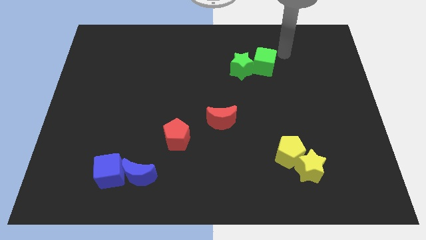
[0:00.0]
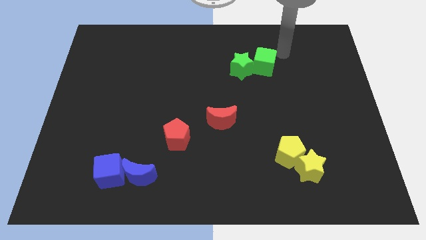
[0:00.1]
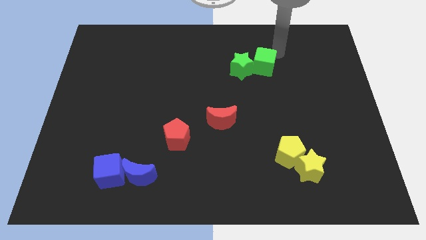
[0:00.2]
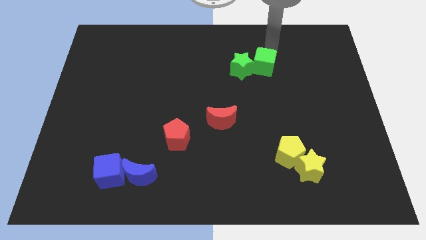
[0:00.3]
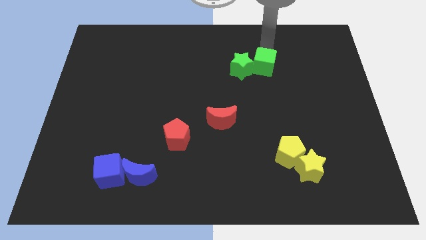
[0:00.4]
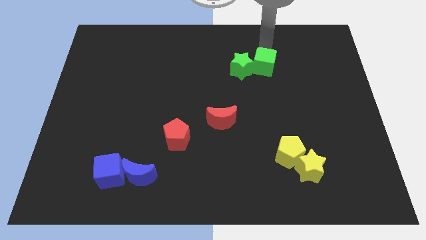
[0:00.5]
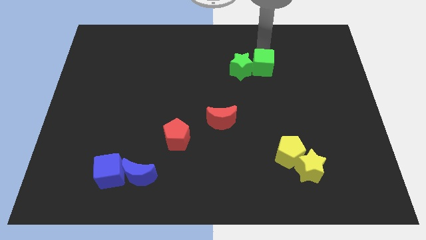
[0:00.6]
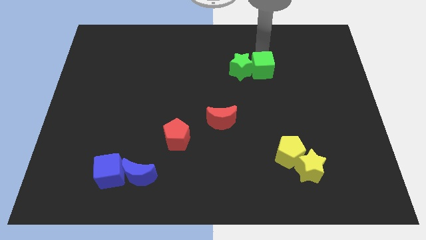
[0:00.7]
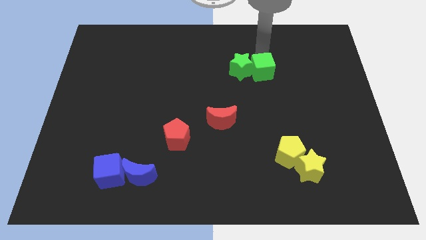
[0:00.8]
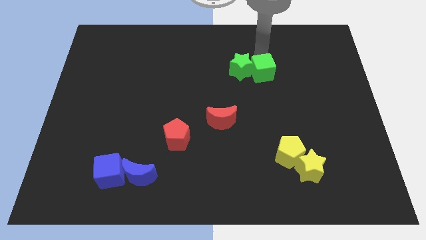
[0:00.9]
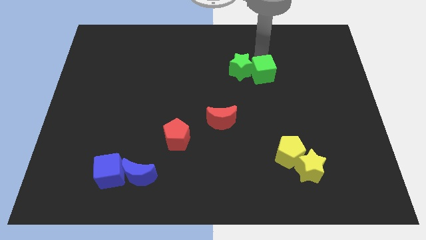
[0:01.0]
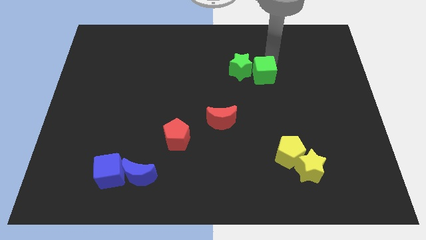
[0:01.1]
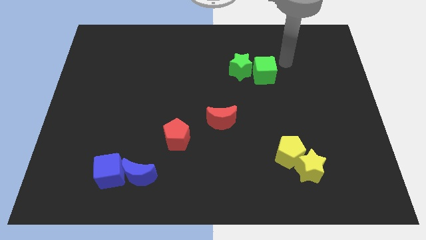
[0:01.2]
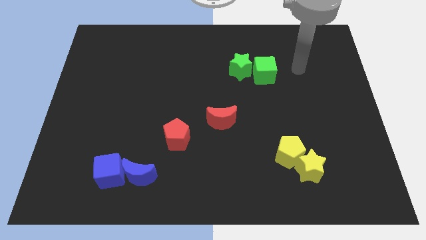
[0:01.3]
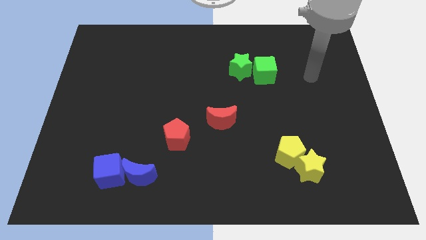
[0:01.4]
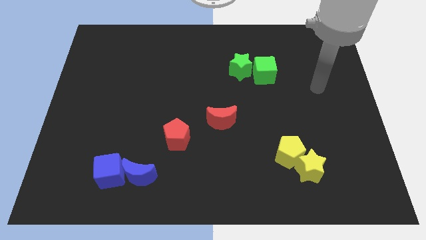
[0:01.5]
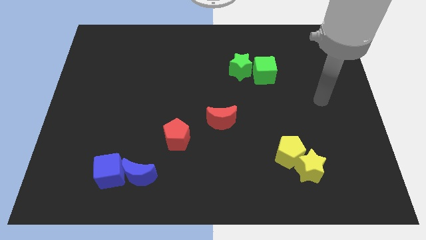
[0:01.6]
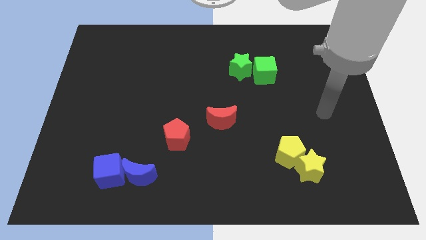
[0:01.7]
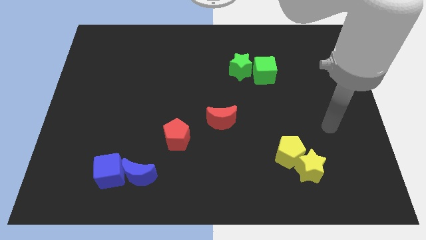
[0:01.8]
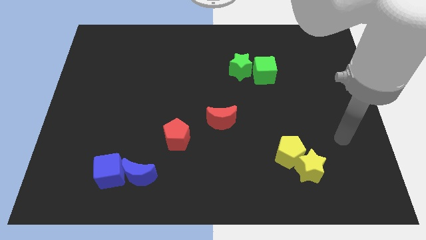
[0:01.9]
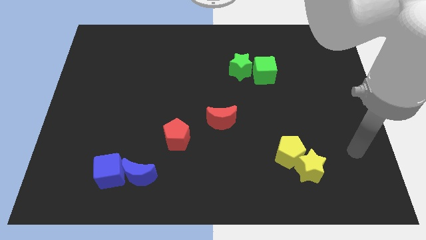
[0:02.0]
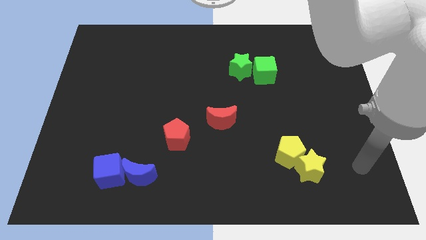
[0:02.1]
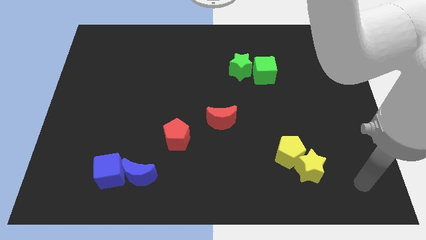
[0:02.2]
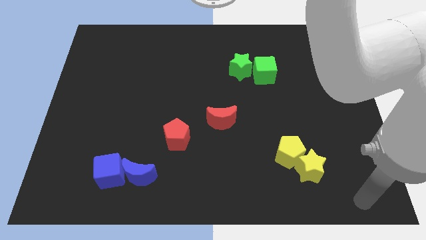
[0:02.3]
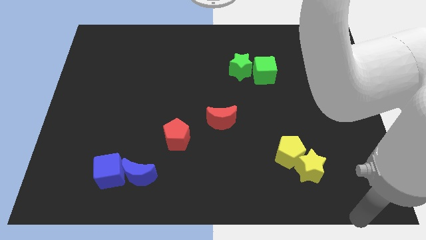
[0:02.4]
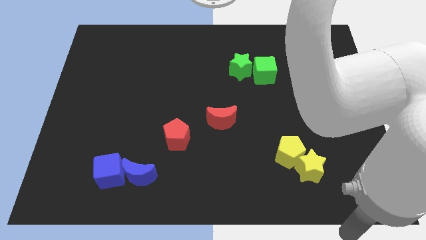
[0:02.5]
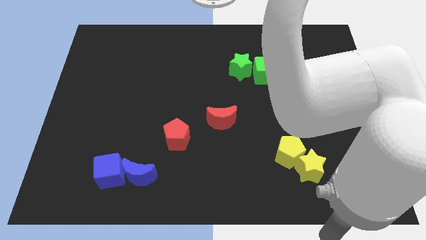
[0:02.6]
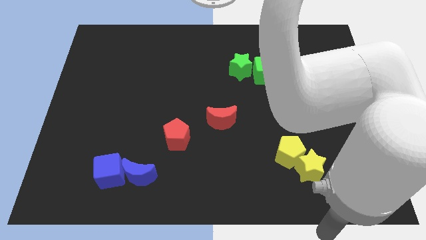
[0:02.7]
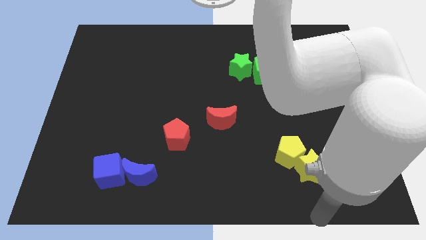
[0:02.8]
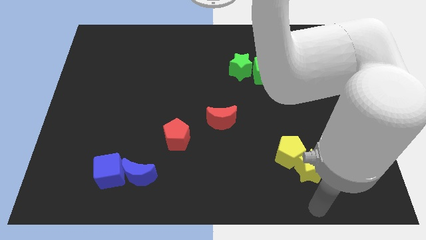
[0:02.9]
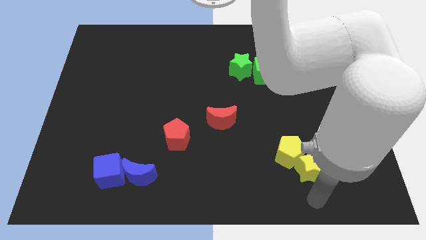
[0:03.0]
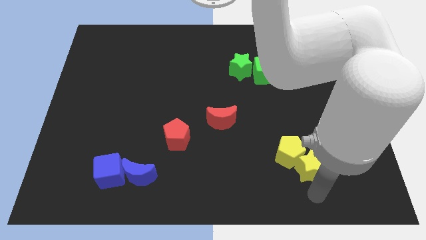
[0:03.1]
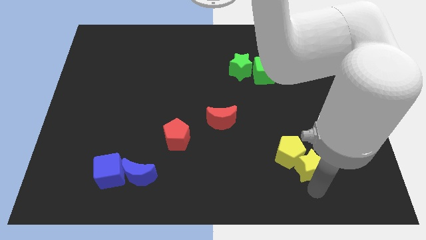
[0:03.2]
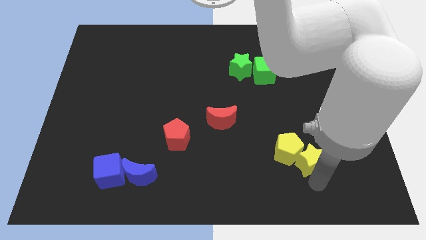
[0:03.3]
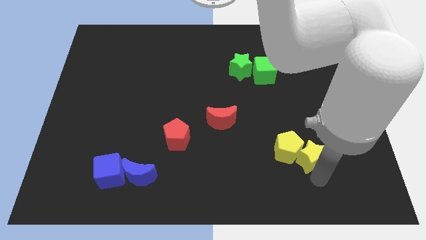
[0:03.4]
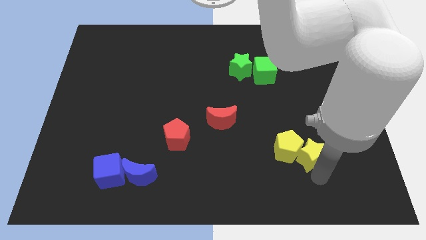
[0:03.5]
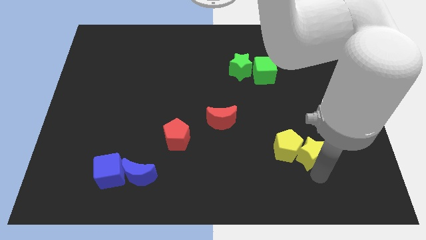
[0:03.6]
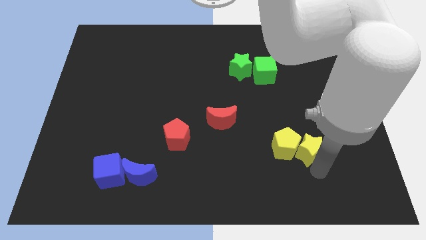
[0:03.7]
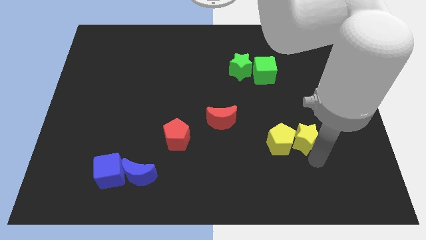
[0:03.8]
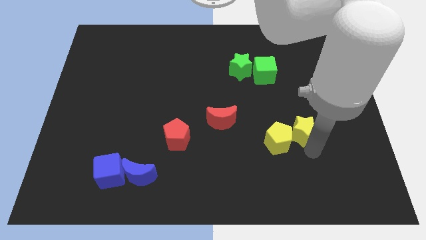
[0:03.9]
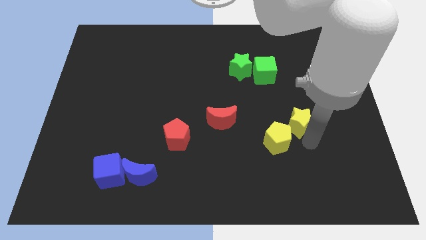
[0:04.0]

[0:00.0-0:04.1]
separate the yellow star from the yellow pentagon

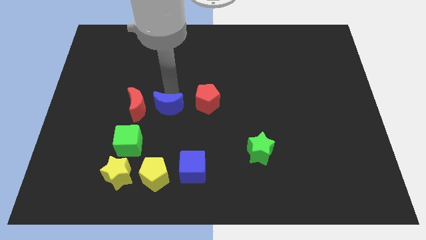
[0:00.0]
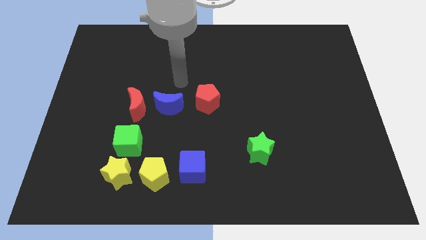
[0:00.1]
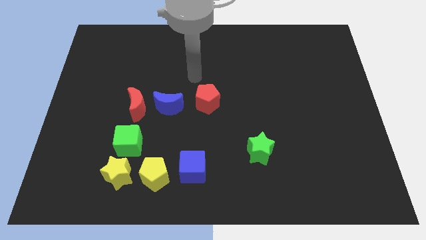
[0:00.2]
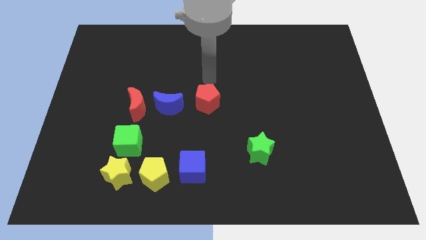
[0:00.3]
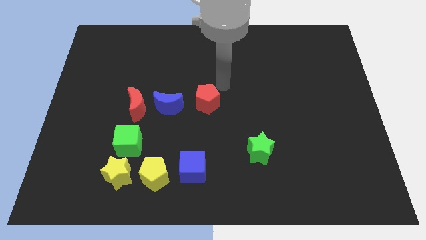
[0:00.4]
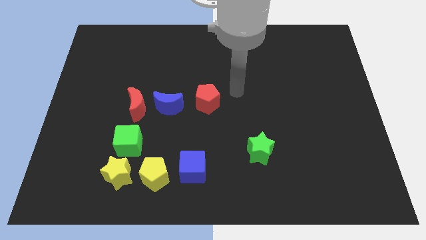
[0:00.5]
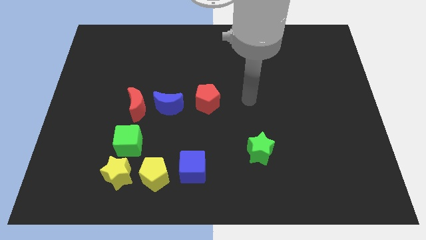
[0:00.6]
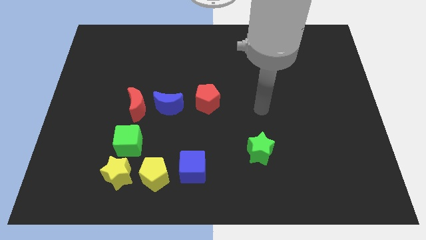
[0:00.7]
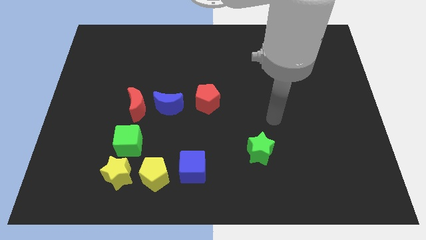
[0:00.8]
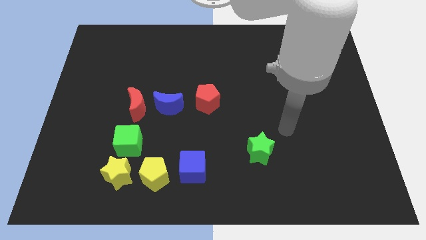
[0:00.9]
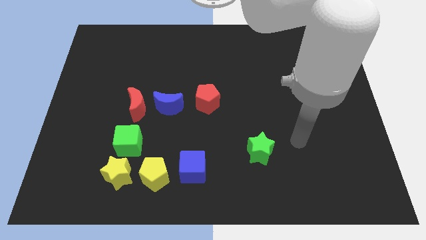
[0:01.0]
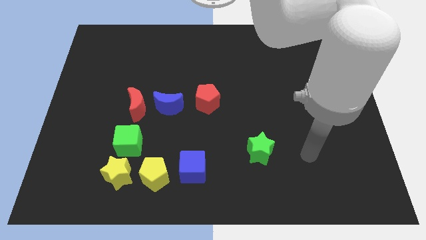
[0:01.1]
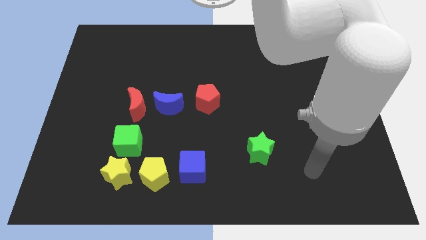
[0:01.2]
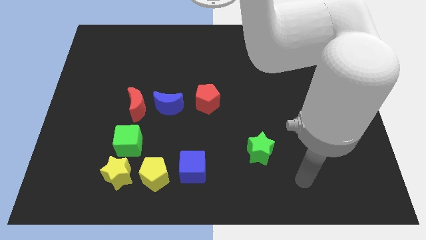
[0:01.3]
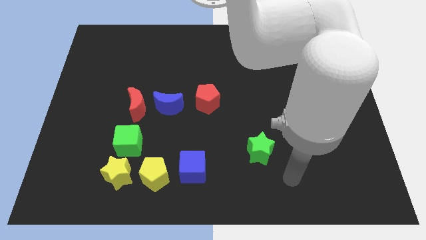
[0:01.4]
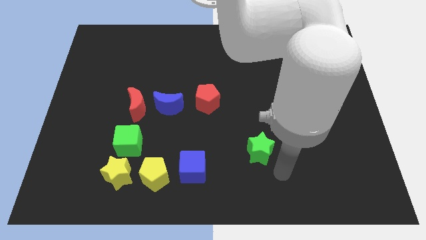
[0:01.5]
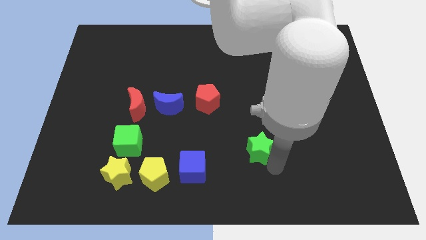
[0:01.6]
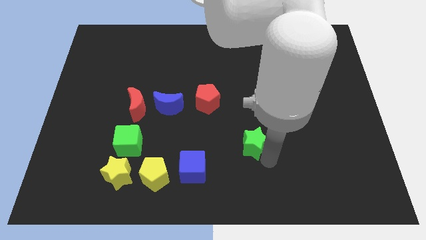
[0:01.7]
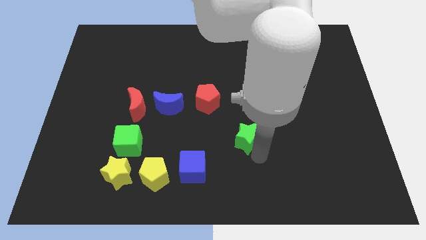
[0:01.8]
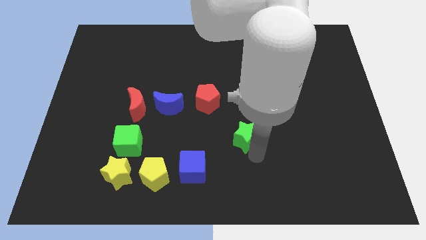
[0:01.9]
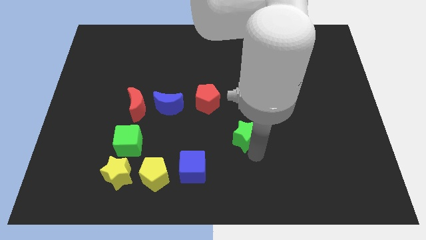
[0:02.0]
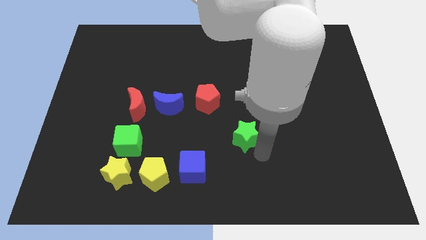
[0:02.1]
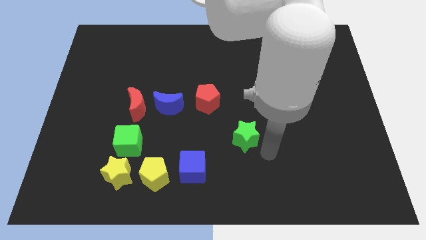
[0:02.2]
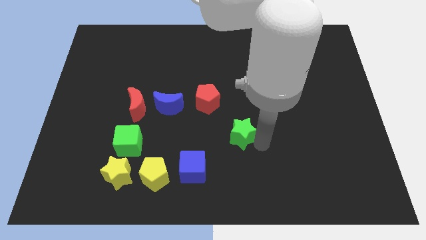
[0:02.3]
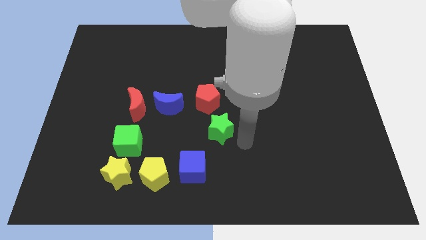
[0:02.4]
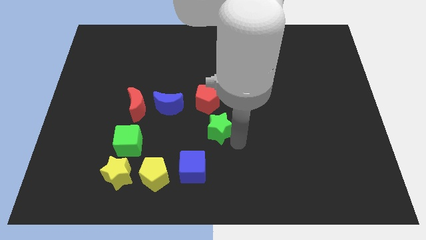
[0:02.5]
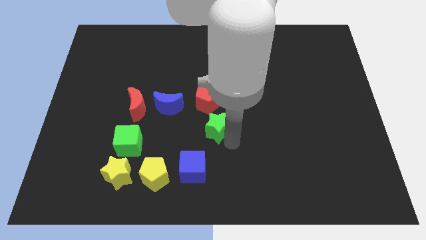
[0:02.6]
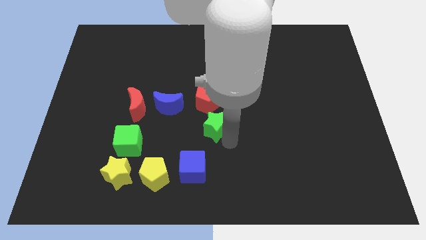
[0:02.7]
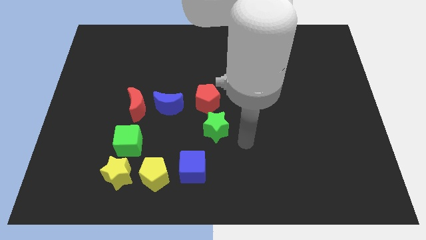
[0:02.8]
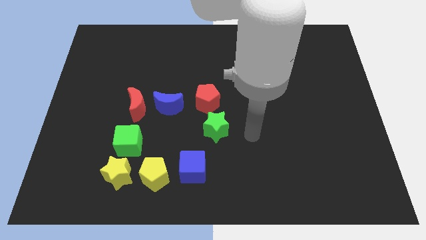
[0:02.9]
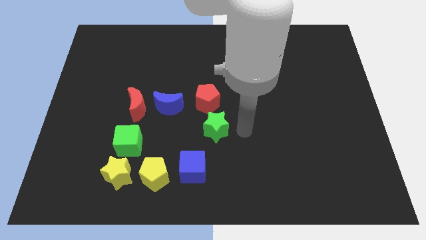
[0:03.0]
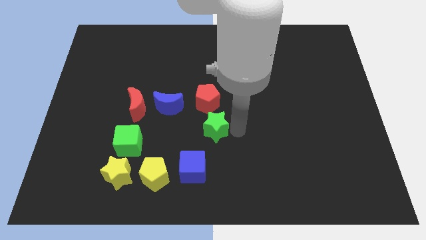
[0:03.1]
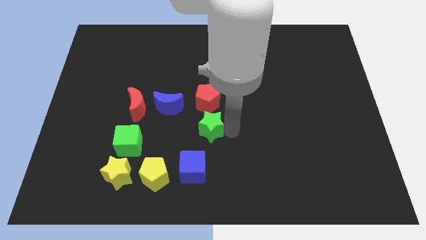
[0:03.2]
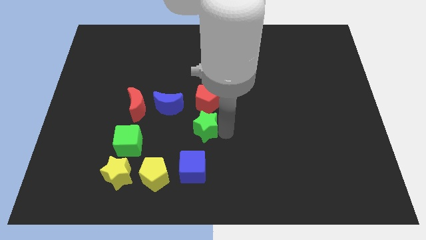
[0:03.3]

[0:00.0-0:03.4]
place the green star at the bottom side of the red pentagon

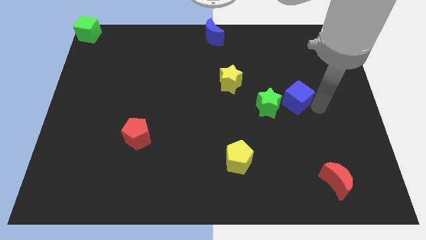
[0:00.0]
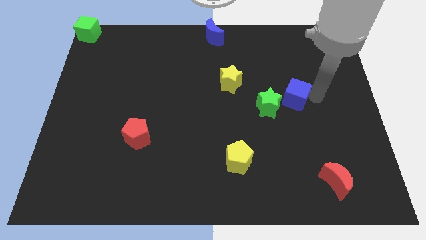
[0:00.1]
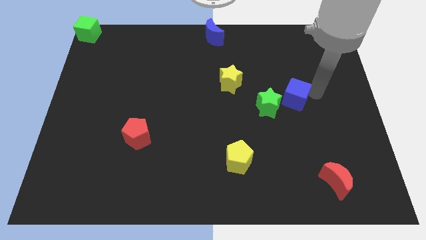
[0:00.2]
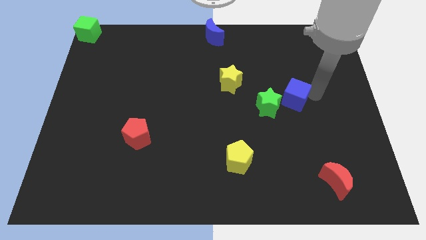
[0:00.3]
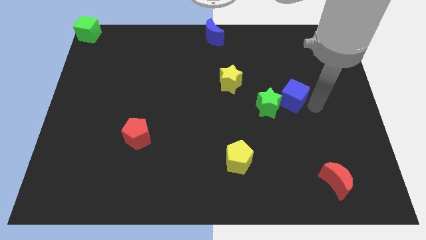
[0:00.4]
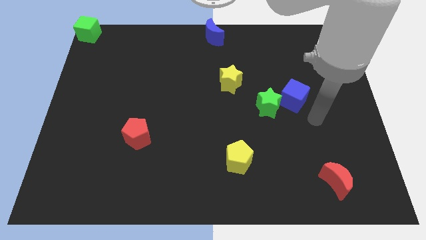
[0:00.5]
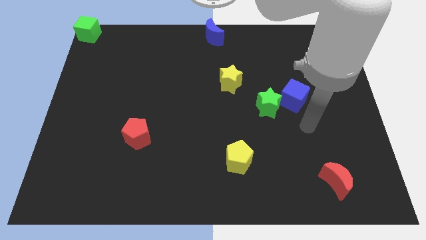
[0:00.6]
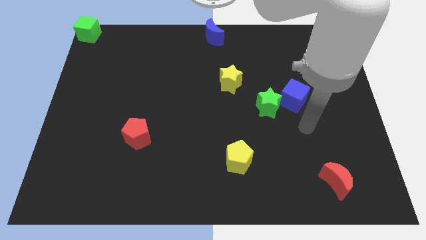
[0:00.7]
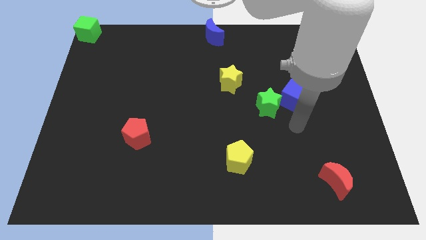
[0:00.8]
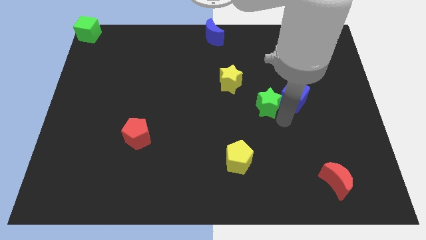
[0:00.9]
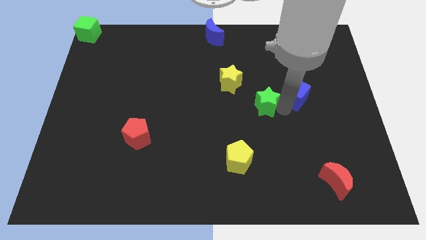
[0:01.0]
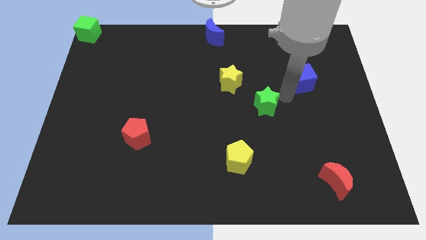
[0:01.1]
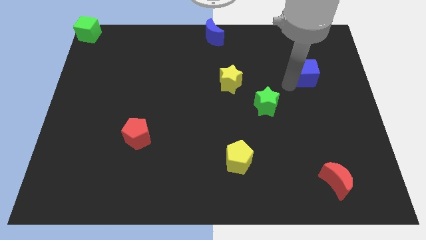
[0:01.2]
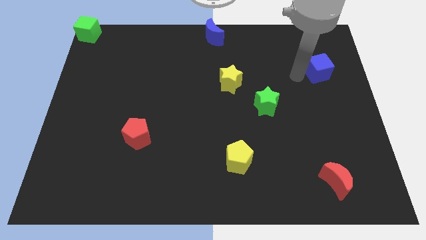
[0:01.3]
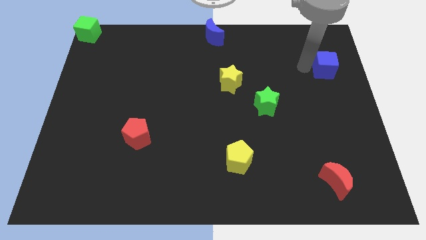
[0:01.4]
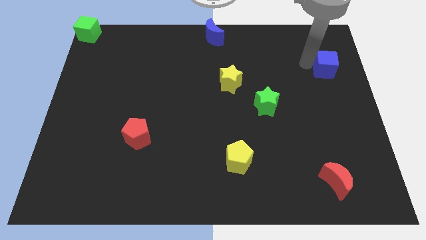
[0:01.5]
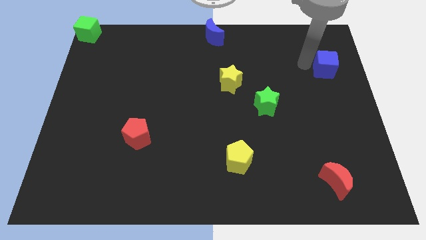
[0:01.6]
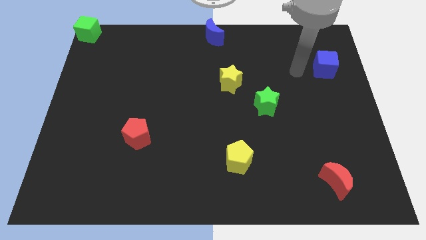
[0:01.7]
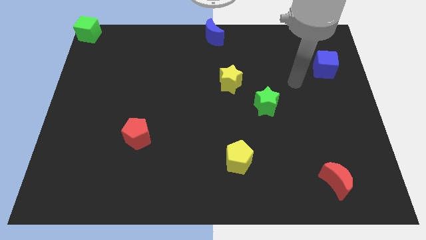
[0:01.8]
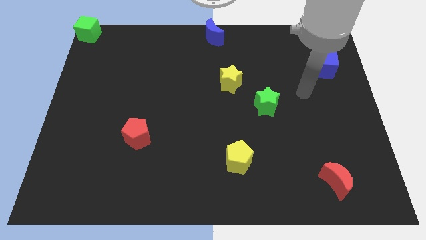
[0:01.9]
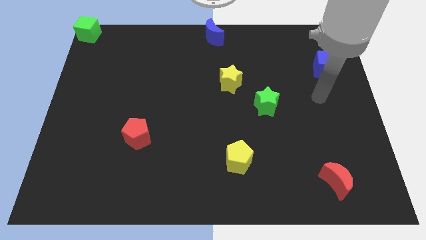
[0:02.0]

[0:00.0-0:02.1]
slide the blue cube away from the green star
